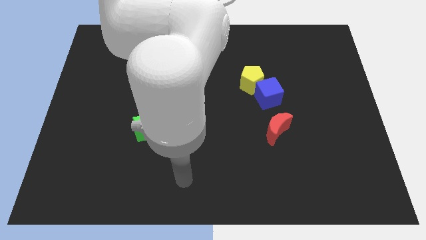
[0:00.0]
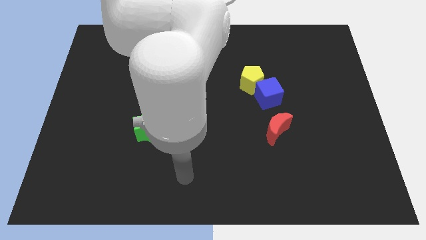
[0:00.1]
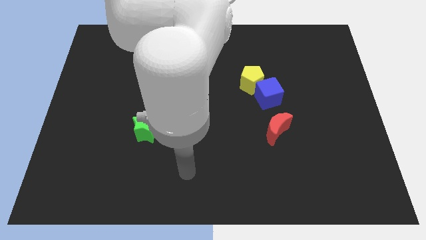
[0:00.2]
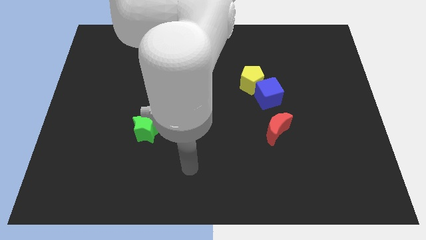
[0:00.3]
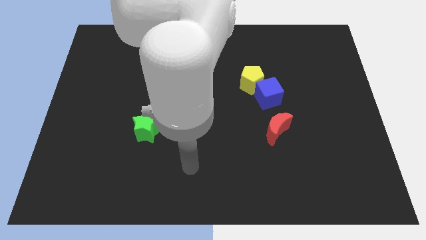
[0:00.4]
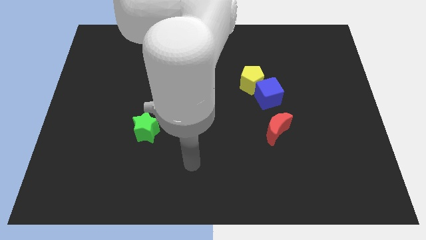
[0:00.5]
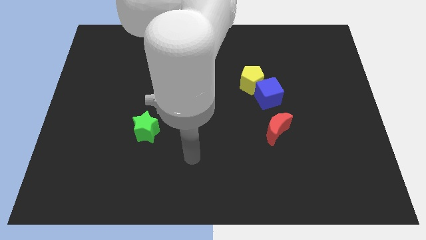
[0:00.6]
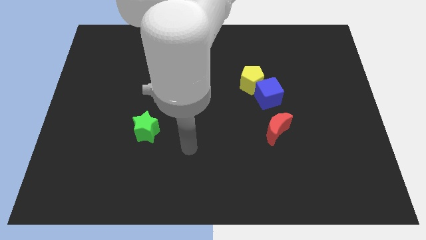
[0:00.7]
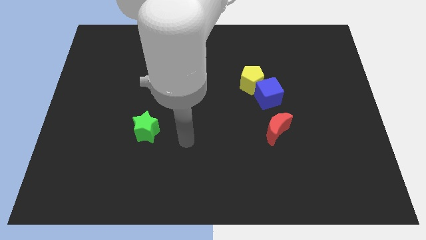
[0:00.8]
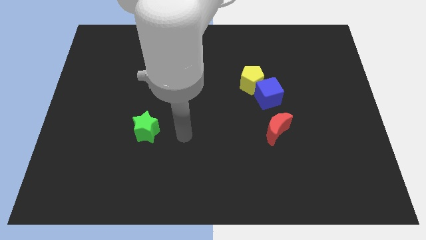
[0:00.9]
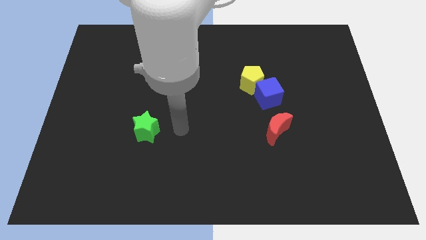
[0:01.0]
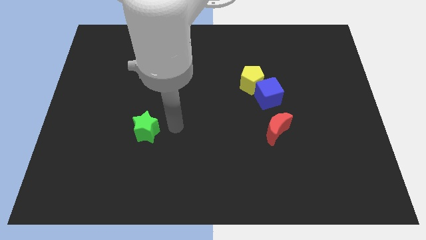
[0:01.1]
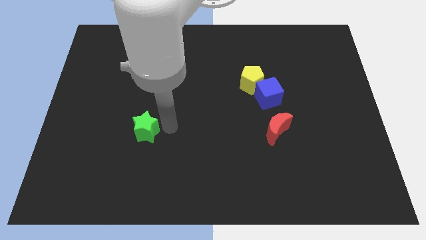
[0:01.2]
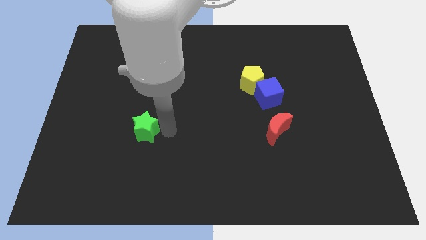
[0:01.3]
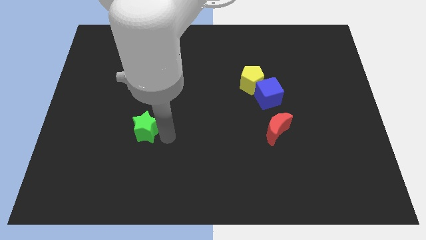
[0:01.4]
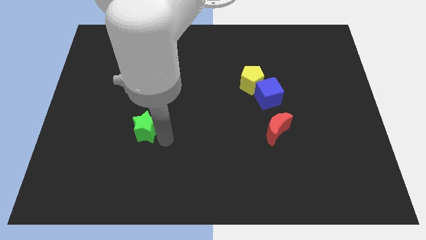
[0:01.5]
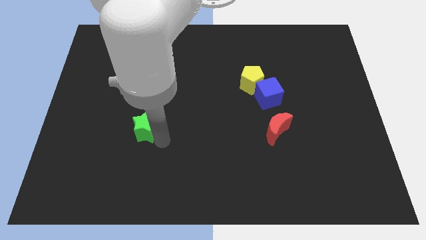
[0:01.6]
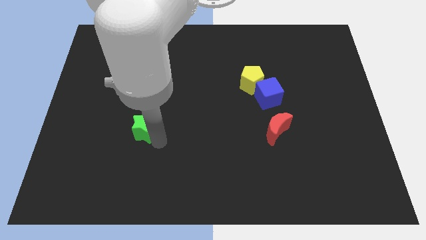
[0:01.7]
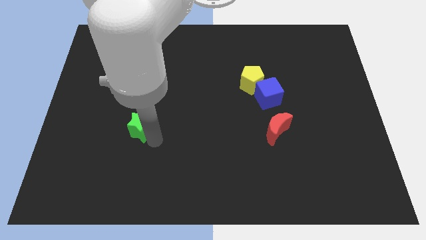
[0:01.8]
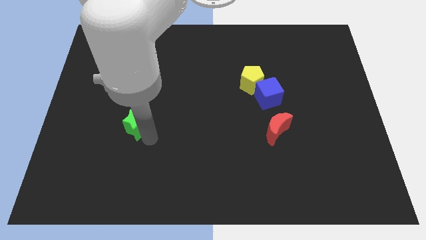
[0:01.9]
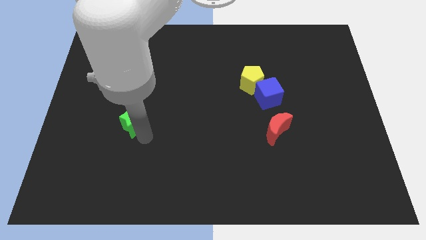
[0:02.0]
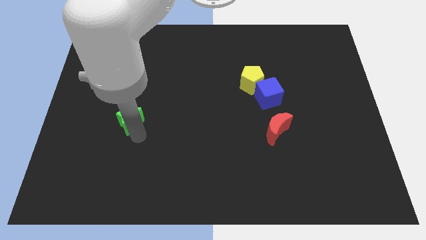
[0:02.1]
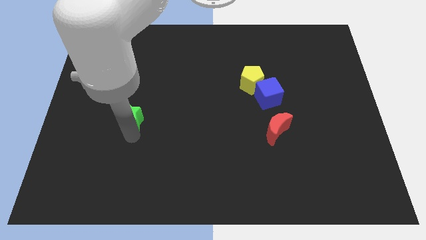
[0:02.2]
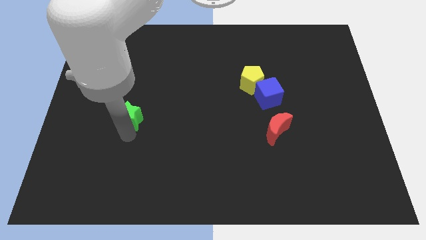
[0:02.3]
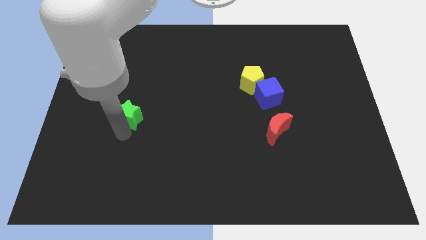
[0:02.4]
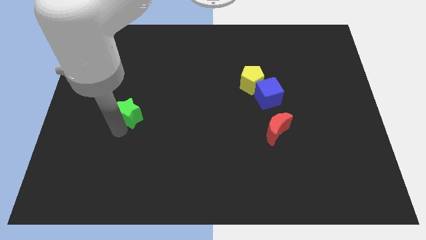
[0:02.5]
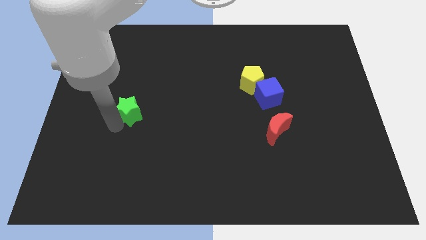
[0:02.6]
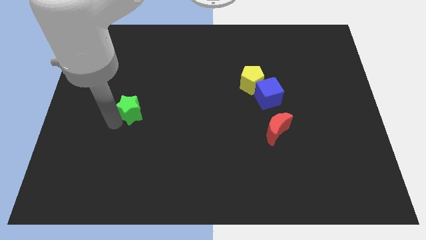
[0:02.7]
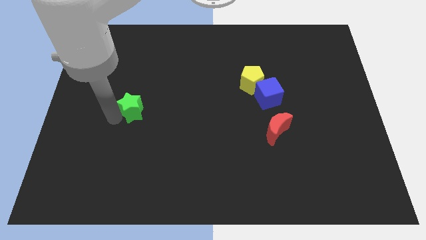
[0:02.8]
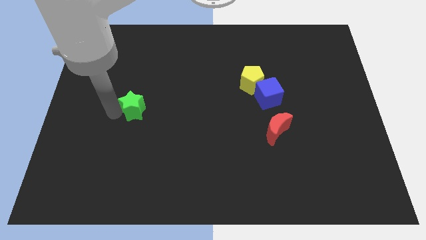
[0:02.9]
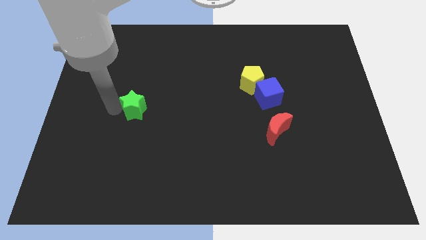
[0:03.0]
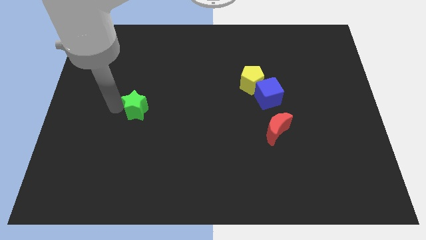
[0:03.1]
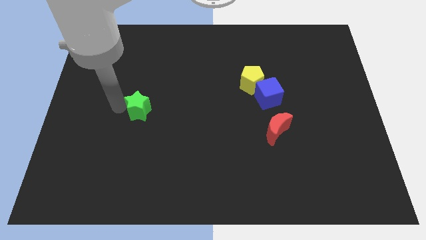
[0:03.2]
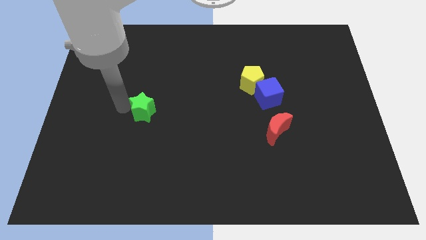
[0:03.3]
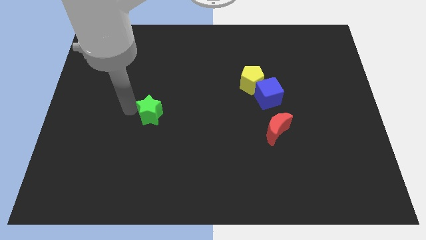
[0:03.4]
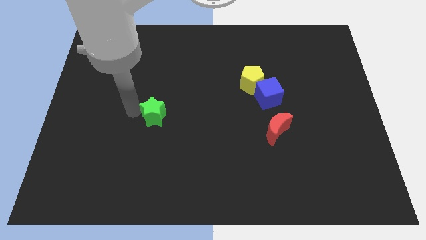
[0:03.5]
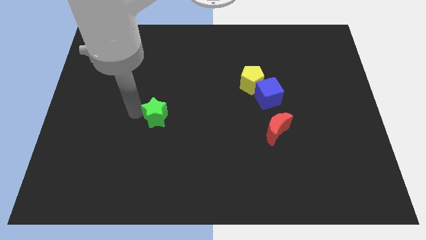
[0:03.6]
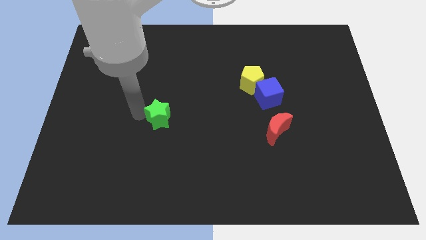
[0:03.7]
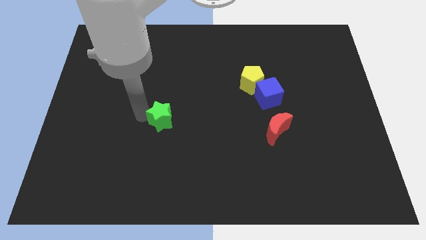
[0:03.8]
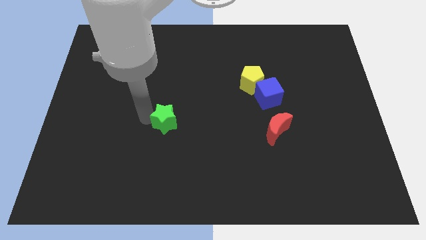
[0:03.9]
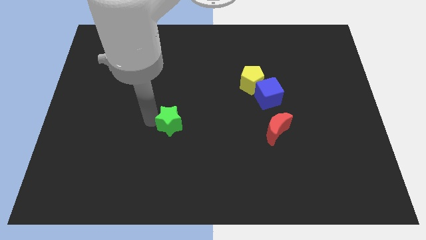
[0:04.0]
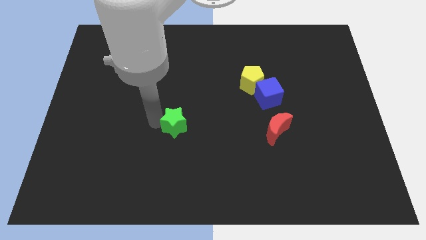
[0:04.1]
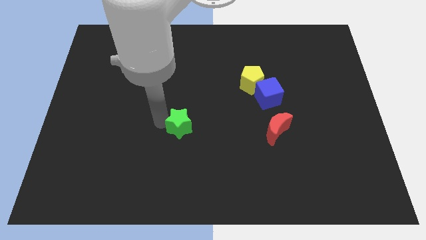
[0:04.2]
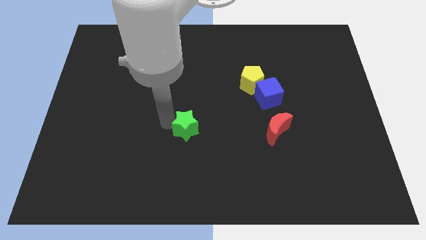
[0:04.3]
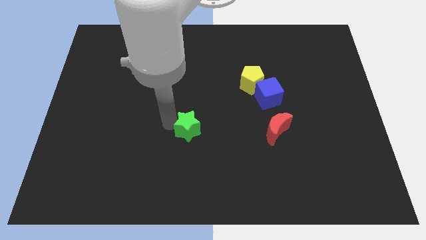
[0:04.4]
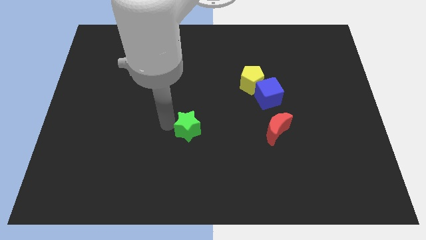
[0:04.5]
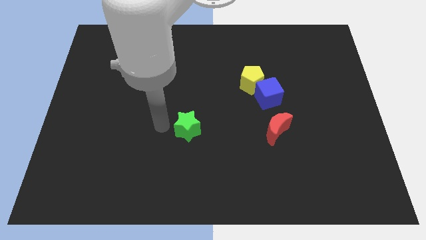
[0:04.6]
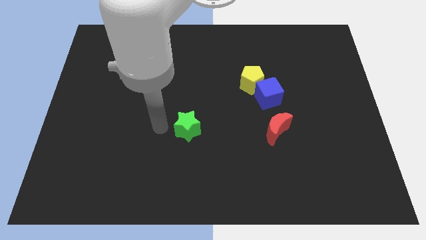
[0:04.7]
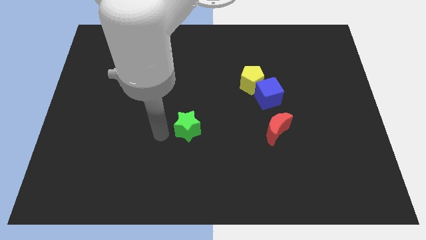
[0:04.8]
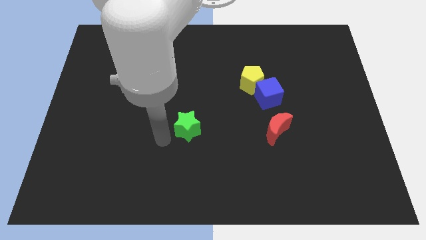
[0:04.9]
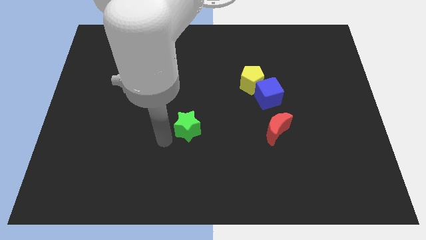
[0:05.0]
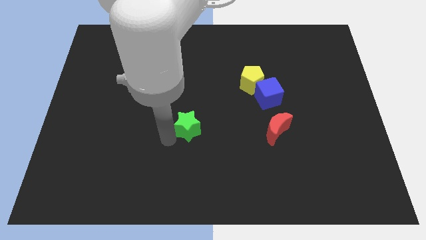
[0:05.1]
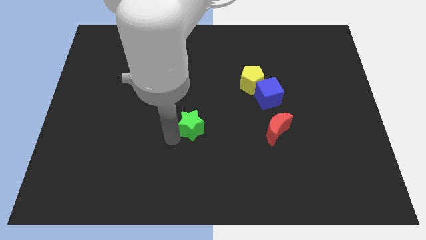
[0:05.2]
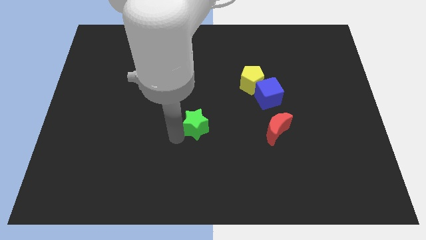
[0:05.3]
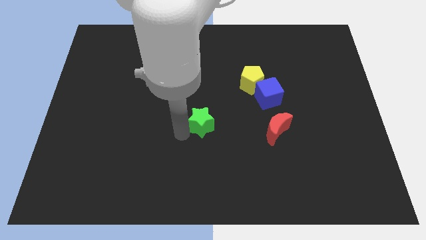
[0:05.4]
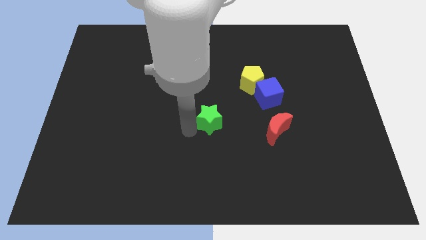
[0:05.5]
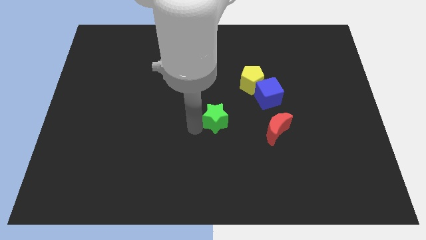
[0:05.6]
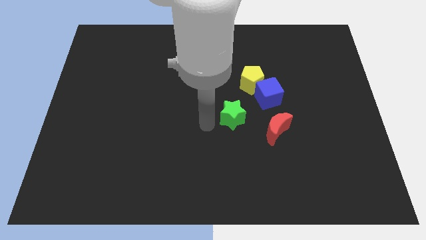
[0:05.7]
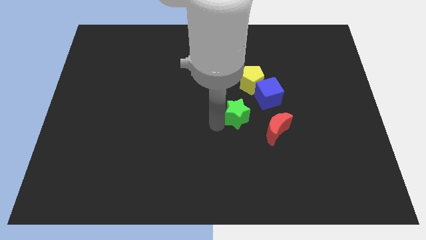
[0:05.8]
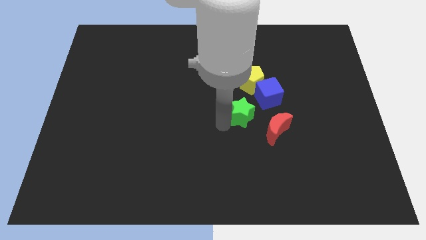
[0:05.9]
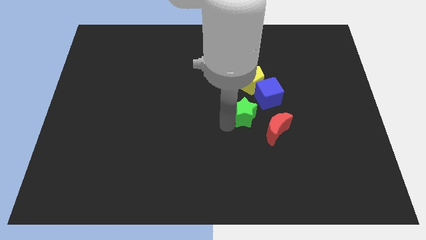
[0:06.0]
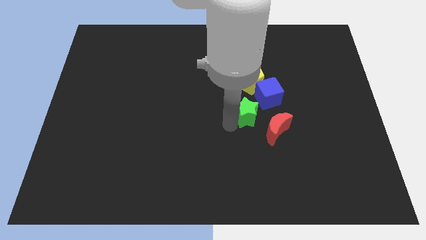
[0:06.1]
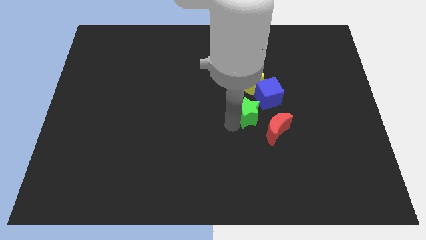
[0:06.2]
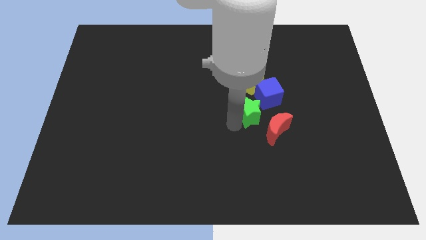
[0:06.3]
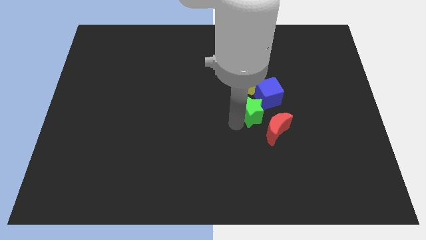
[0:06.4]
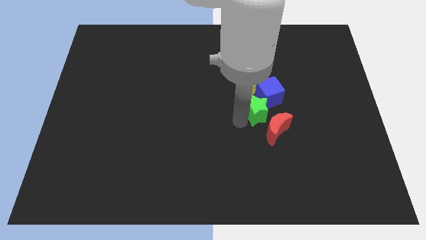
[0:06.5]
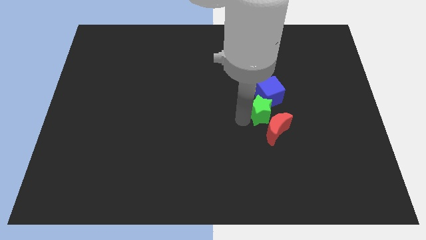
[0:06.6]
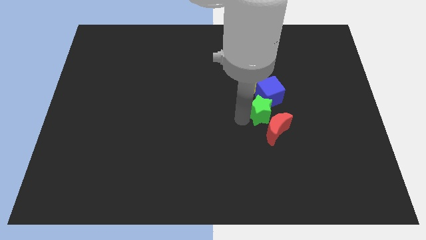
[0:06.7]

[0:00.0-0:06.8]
slide the star to the cube

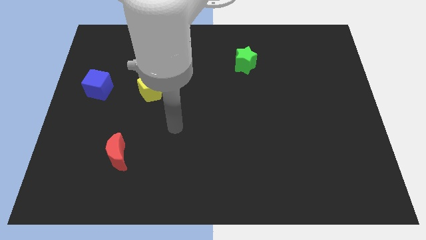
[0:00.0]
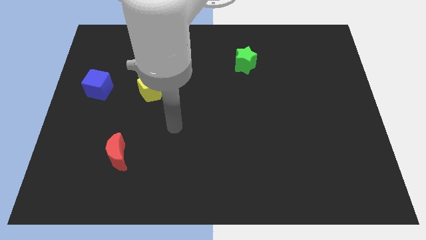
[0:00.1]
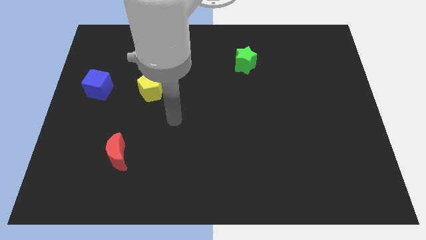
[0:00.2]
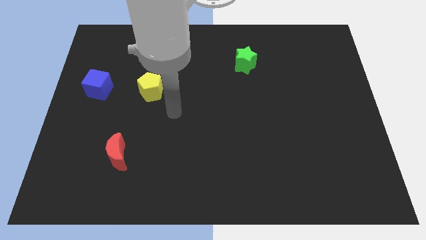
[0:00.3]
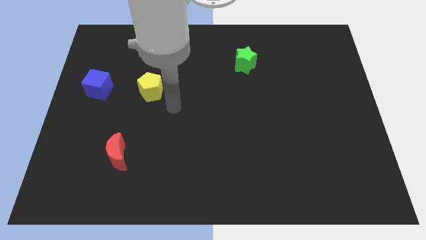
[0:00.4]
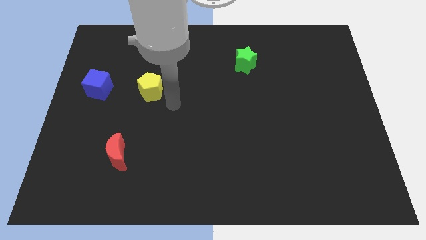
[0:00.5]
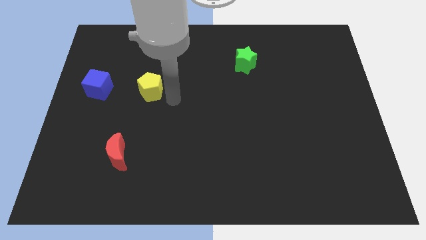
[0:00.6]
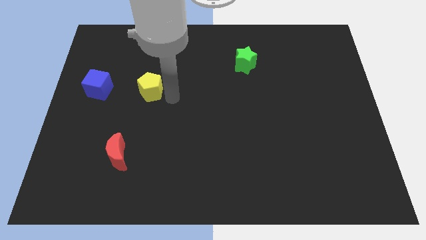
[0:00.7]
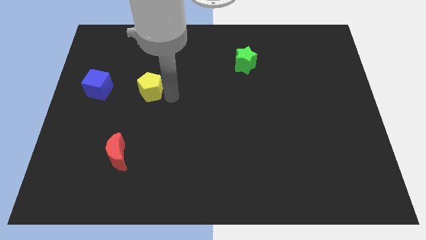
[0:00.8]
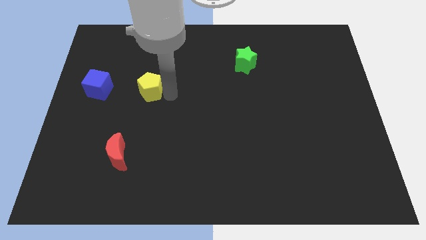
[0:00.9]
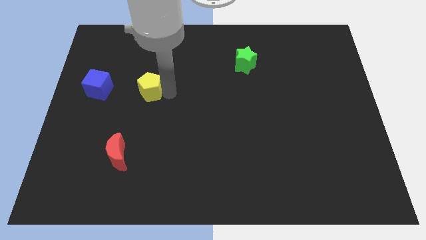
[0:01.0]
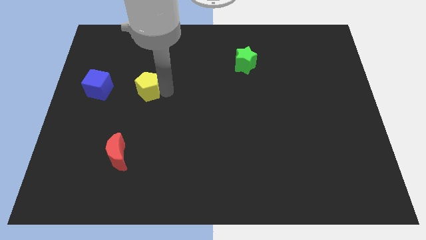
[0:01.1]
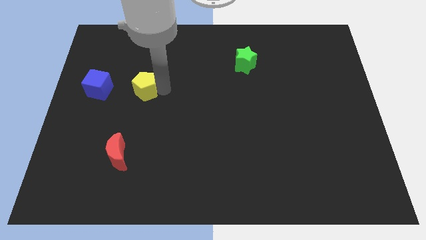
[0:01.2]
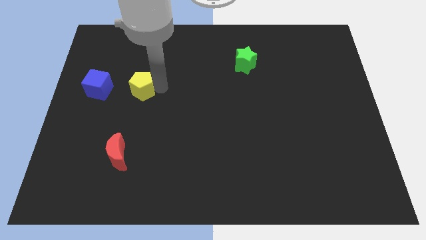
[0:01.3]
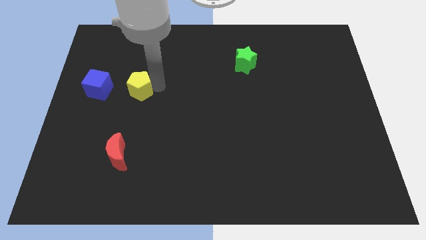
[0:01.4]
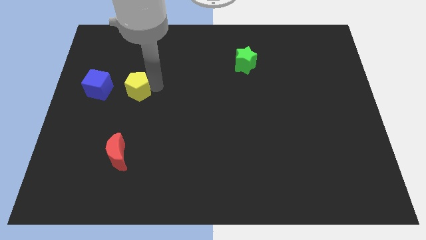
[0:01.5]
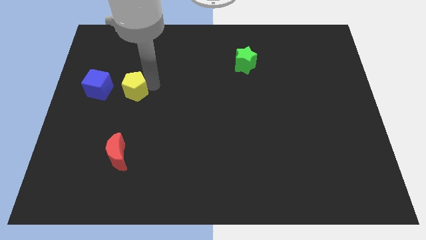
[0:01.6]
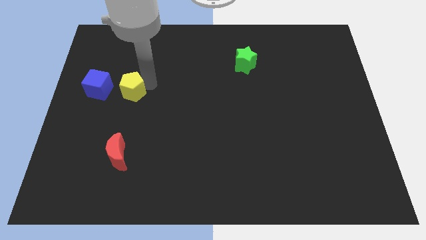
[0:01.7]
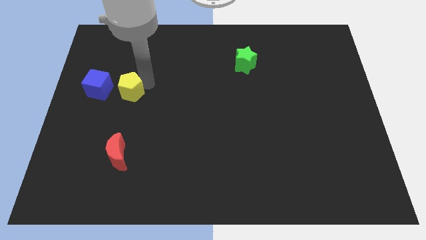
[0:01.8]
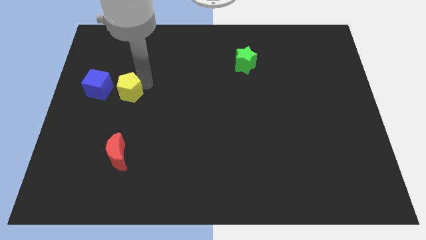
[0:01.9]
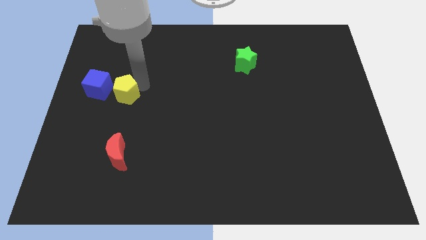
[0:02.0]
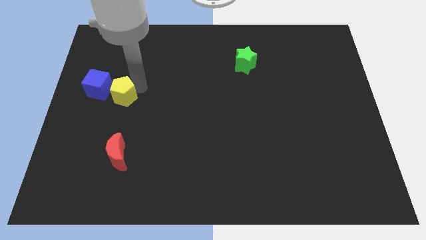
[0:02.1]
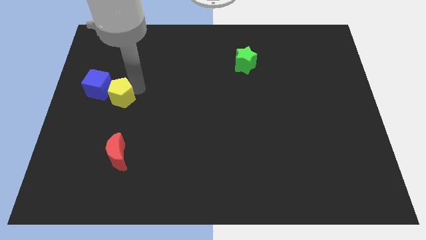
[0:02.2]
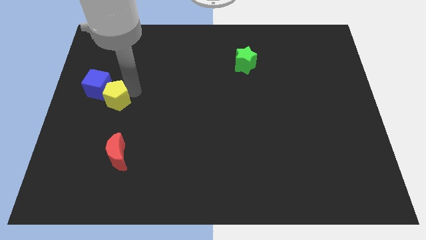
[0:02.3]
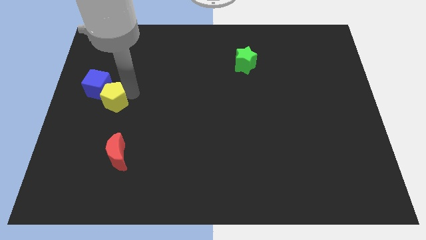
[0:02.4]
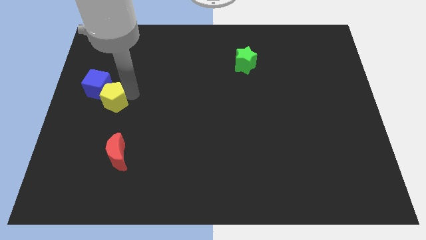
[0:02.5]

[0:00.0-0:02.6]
push the yellow block towards the blue cube
